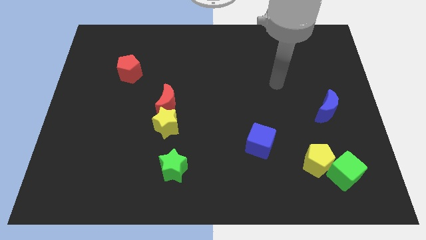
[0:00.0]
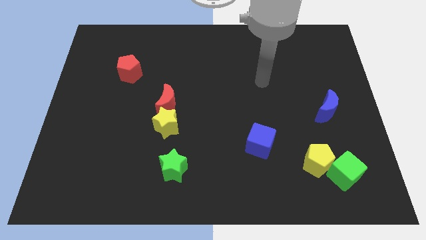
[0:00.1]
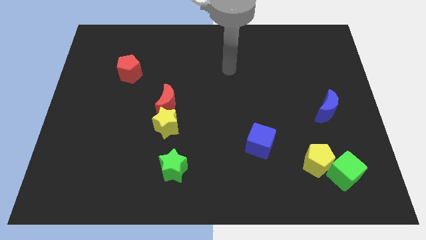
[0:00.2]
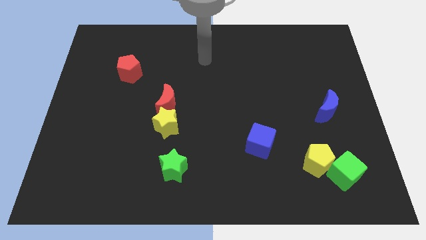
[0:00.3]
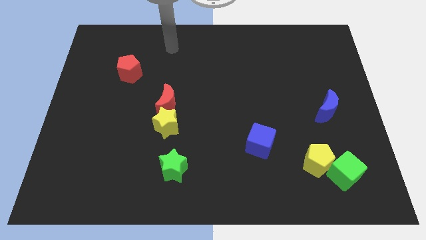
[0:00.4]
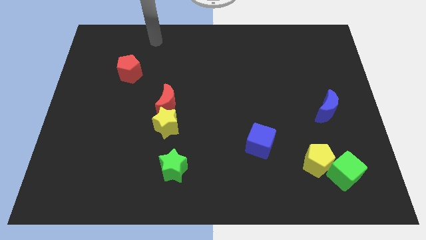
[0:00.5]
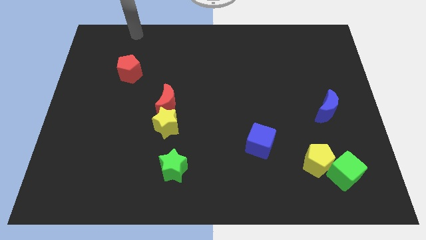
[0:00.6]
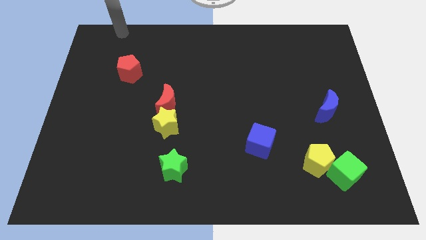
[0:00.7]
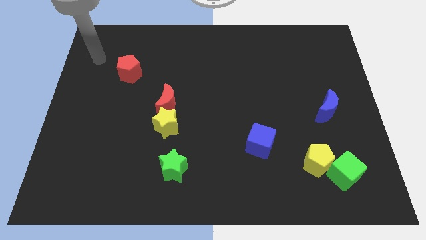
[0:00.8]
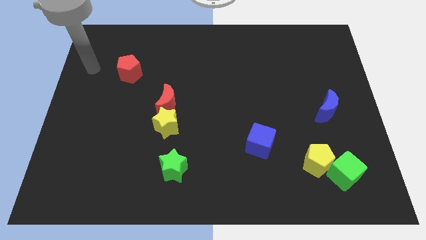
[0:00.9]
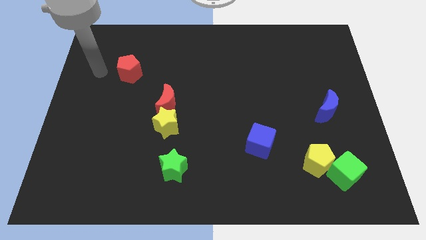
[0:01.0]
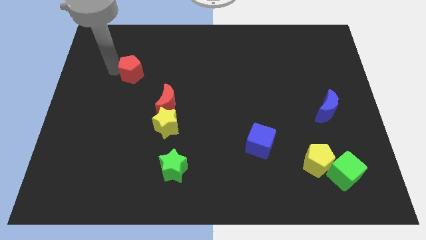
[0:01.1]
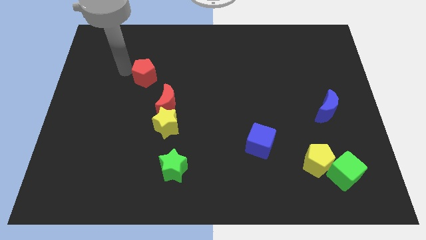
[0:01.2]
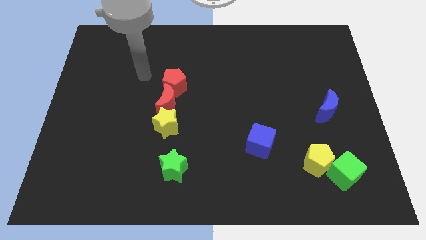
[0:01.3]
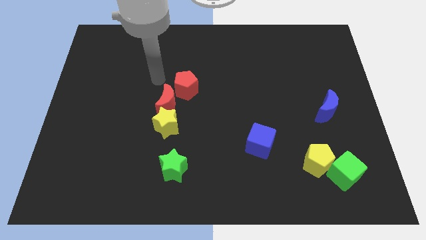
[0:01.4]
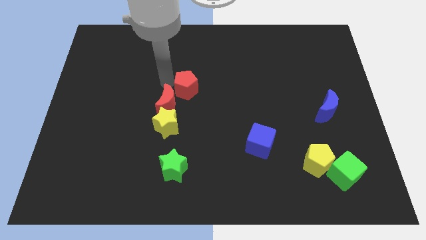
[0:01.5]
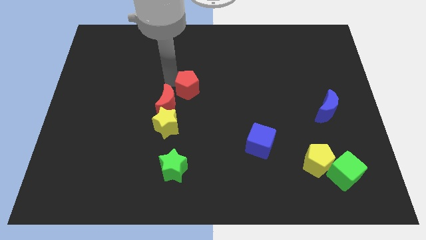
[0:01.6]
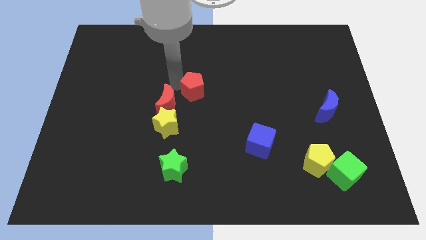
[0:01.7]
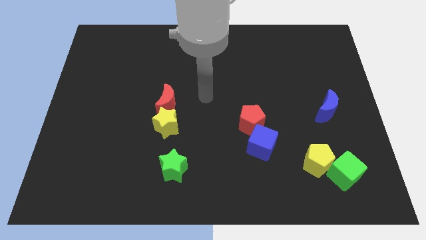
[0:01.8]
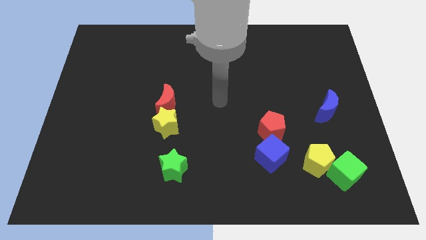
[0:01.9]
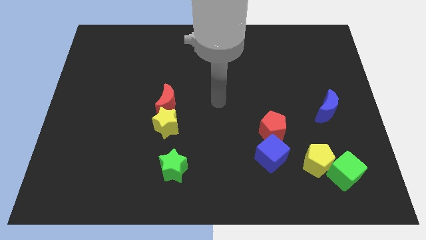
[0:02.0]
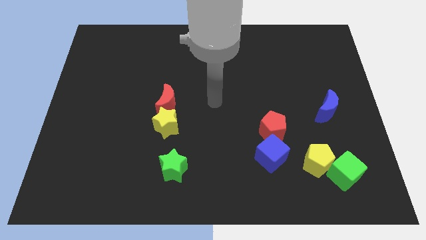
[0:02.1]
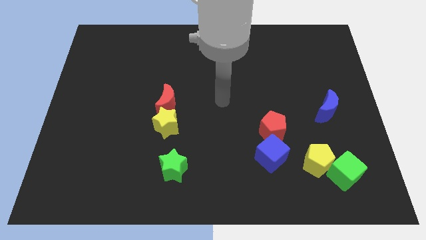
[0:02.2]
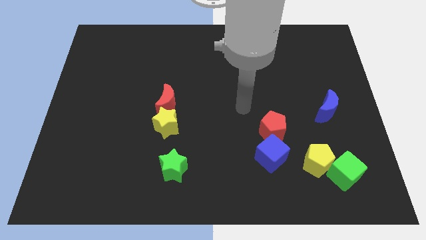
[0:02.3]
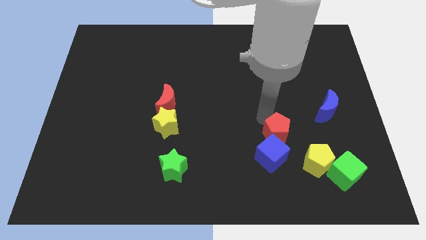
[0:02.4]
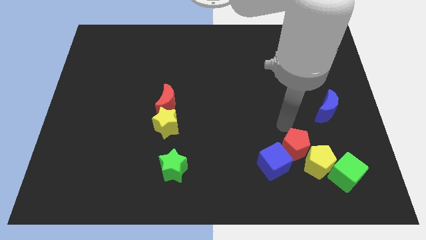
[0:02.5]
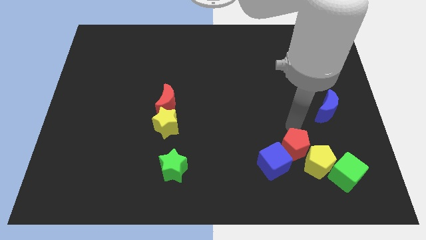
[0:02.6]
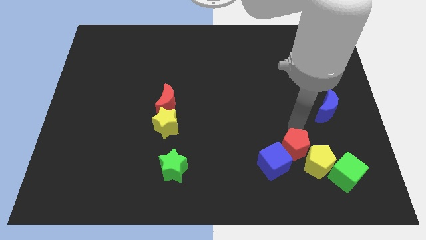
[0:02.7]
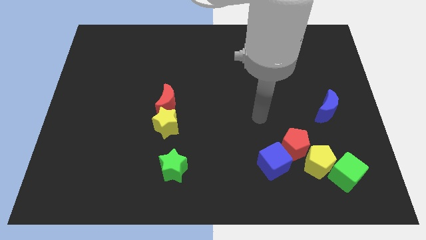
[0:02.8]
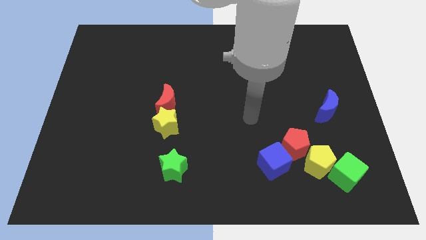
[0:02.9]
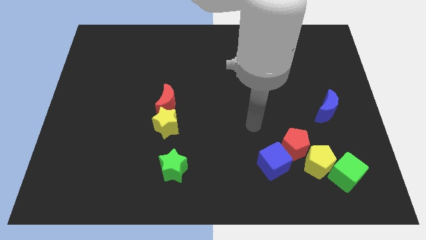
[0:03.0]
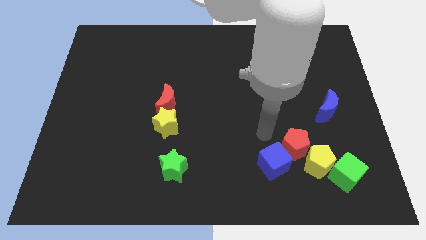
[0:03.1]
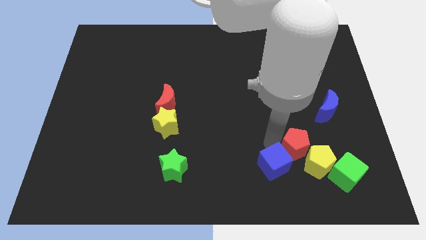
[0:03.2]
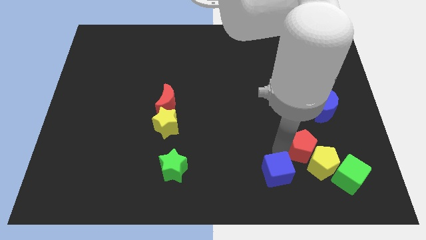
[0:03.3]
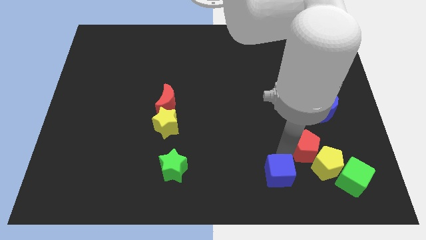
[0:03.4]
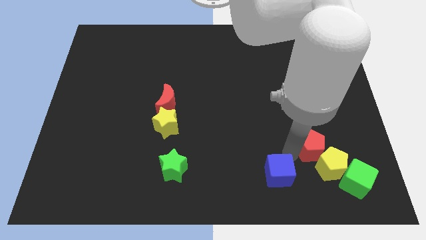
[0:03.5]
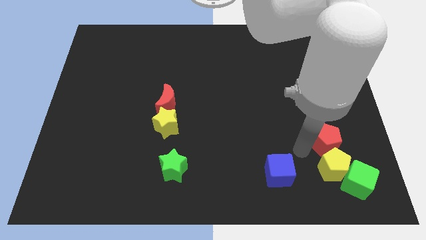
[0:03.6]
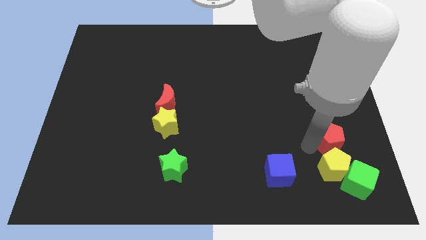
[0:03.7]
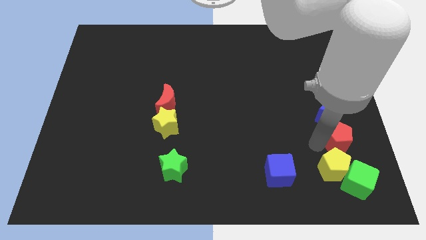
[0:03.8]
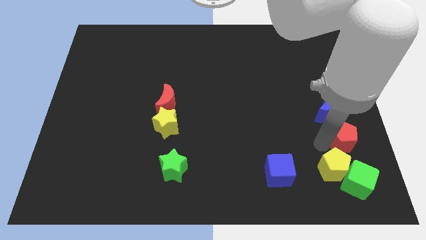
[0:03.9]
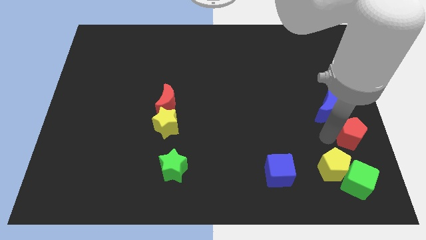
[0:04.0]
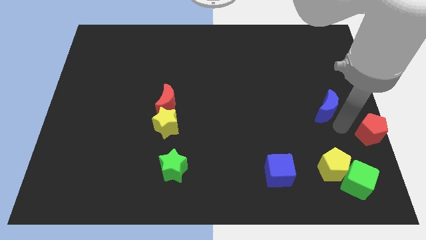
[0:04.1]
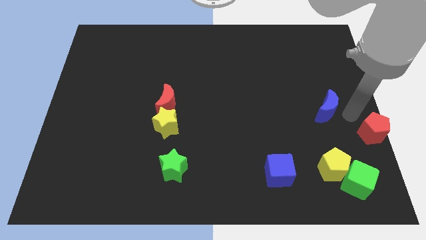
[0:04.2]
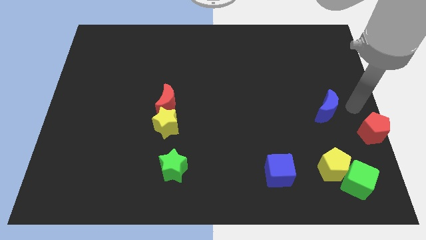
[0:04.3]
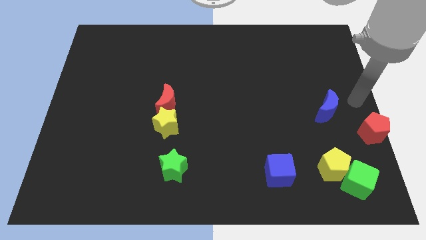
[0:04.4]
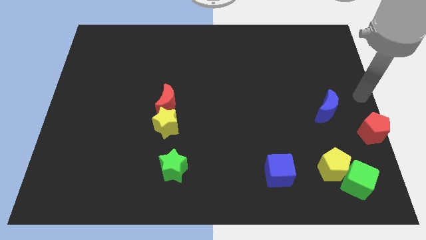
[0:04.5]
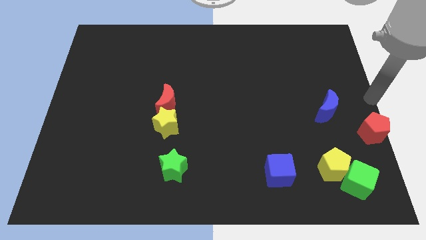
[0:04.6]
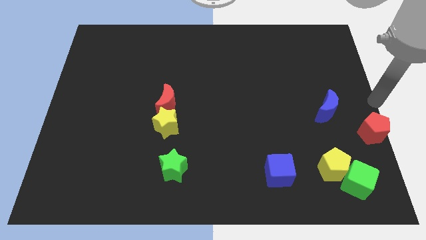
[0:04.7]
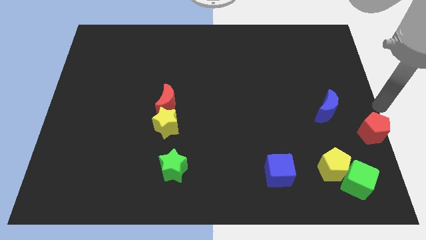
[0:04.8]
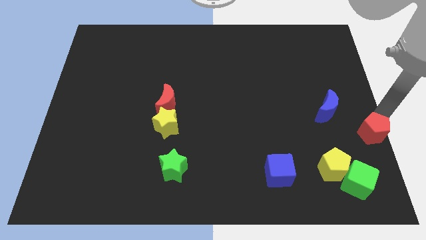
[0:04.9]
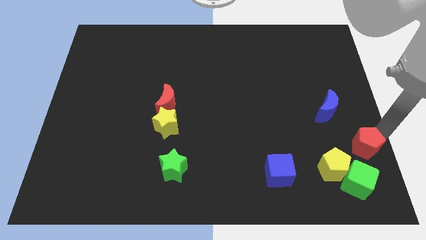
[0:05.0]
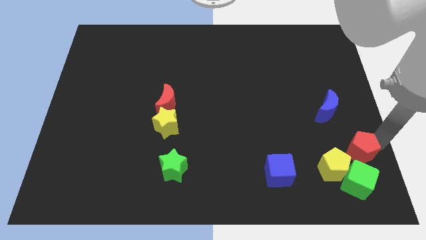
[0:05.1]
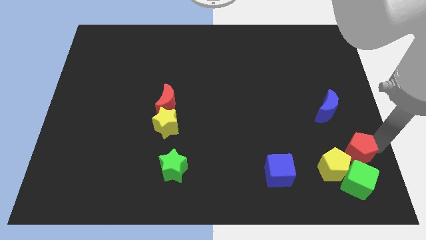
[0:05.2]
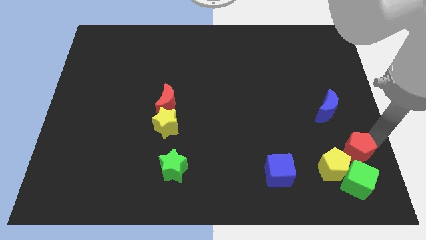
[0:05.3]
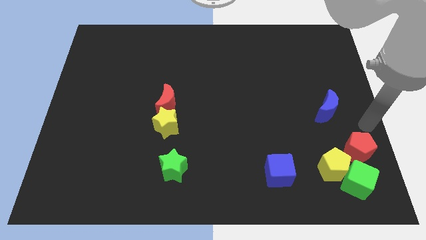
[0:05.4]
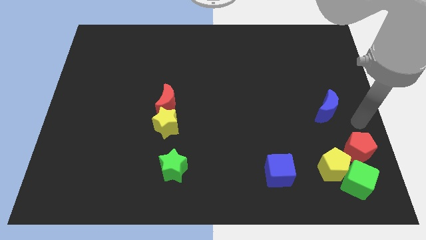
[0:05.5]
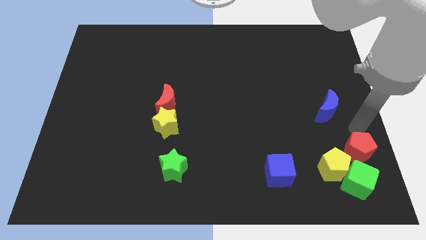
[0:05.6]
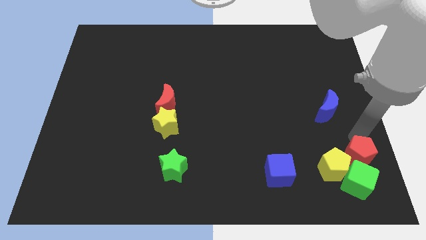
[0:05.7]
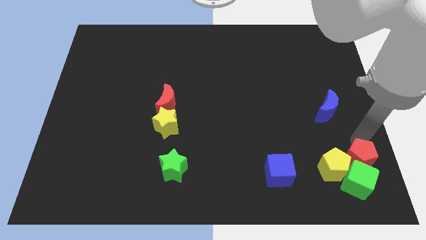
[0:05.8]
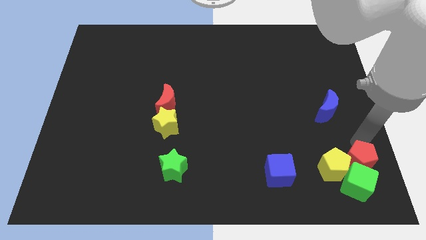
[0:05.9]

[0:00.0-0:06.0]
put the red pentagon towards the green cube

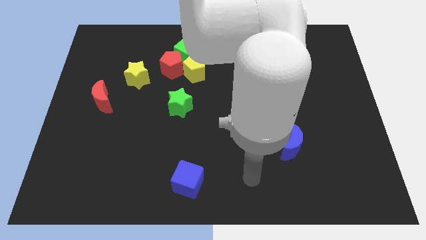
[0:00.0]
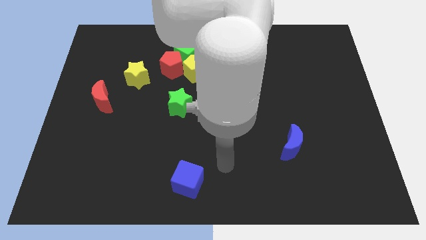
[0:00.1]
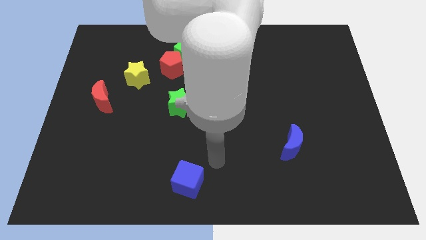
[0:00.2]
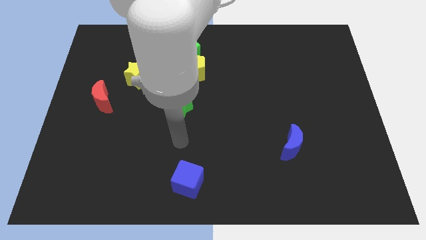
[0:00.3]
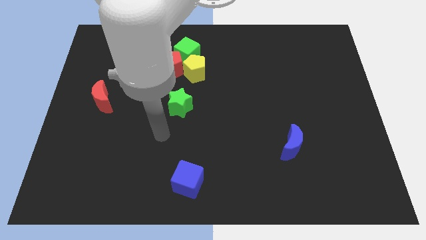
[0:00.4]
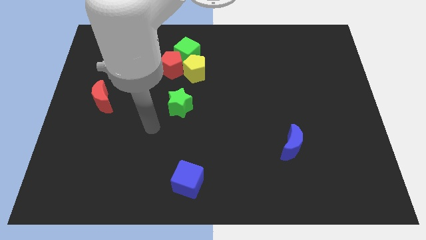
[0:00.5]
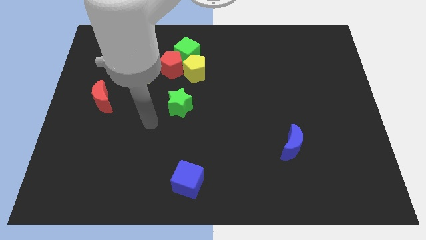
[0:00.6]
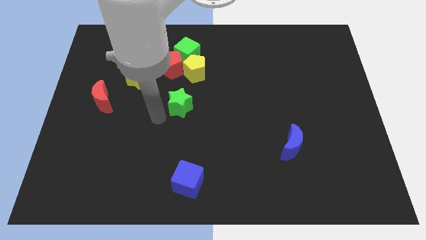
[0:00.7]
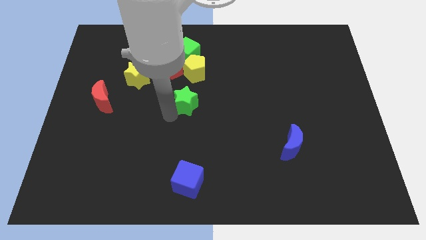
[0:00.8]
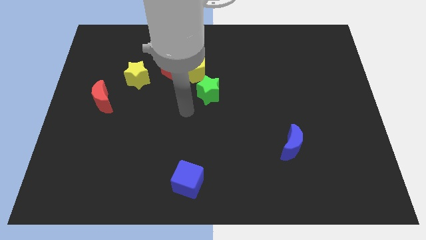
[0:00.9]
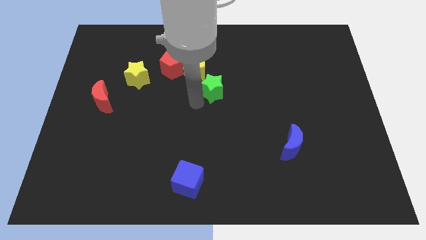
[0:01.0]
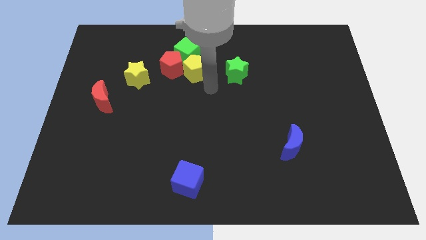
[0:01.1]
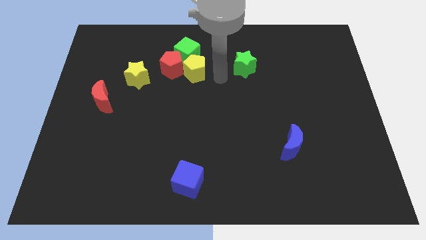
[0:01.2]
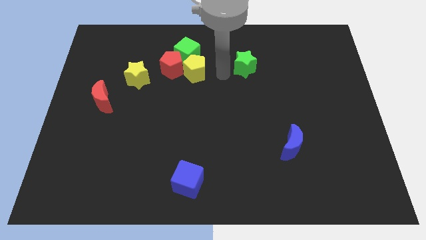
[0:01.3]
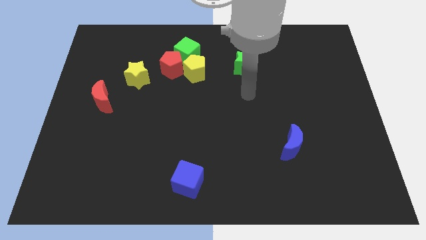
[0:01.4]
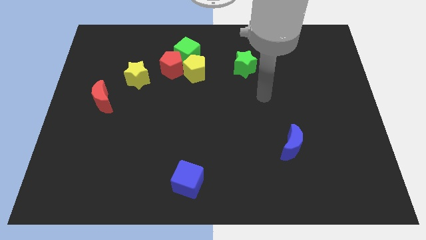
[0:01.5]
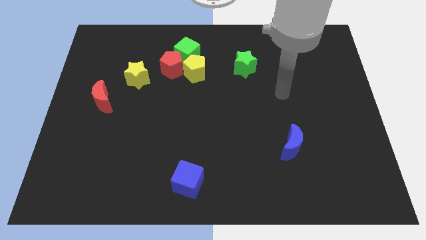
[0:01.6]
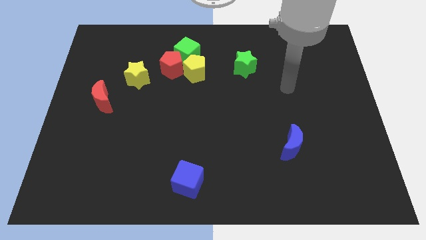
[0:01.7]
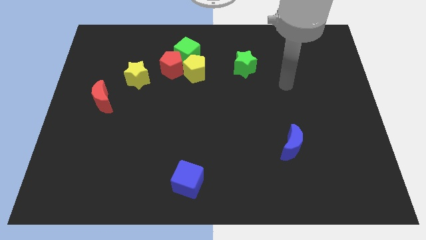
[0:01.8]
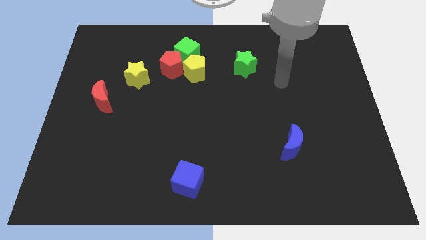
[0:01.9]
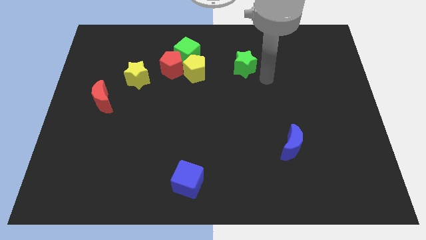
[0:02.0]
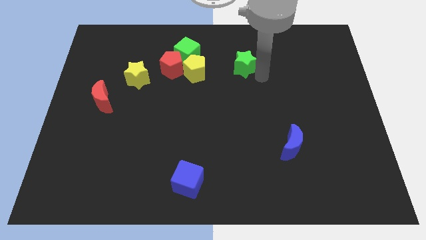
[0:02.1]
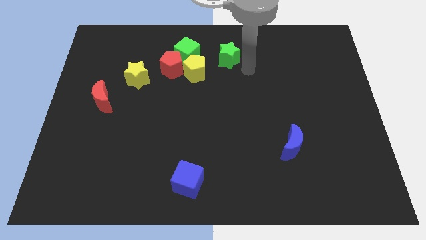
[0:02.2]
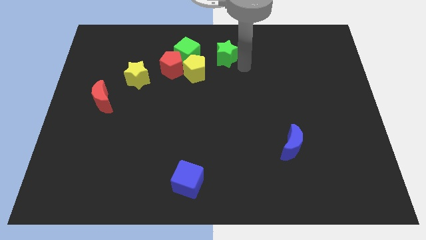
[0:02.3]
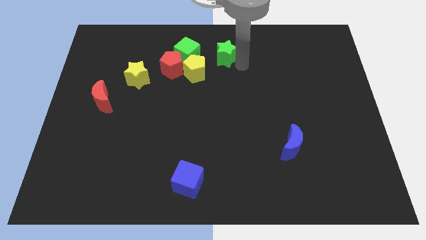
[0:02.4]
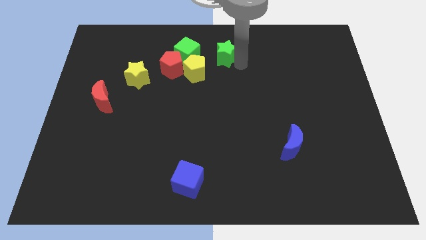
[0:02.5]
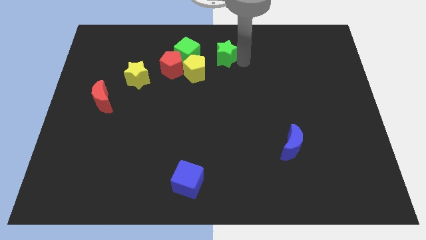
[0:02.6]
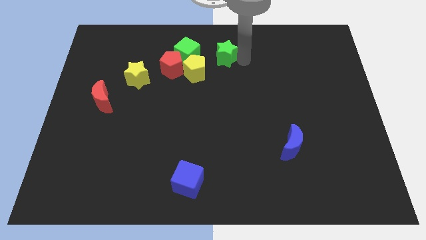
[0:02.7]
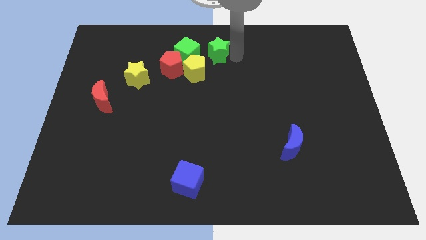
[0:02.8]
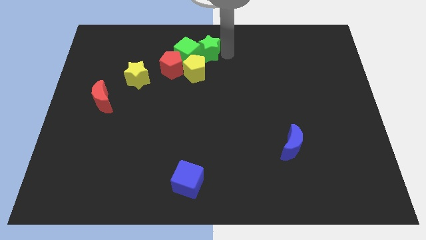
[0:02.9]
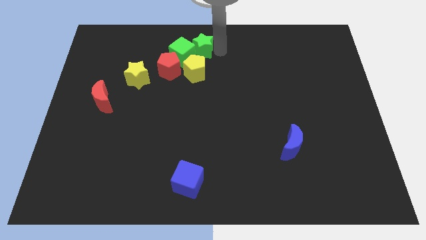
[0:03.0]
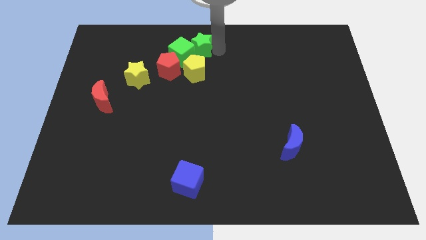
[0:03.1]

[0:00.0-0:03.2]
move the green star next to the green cube
